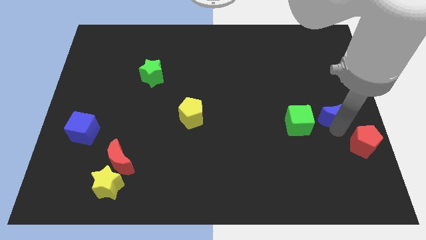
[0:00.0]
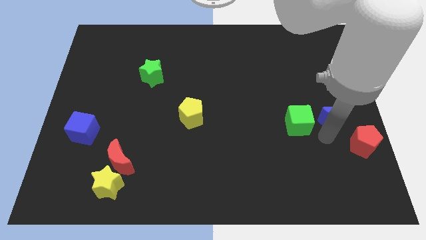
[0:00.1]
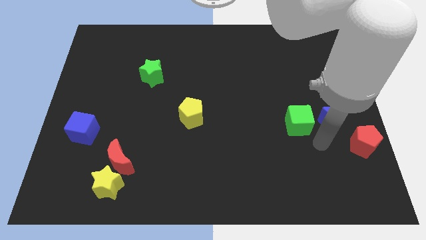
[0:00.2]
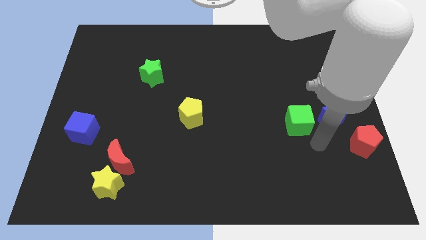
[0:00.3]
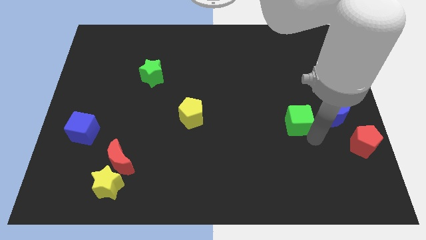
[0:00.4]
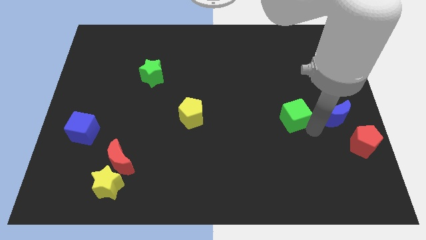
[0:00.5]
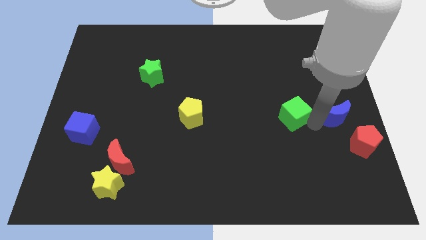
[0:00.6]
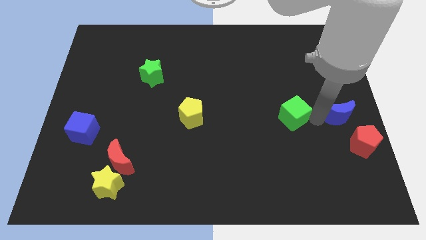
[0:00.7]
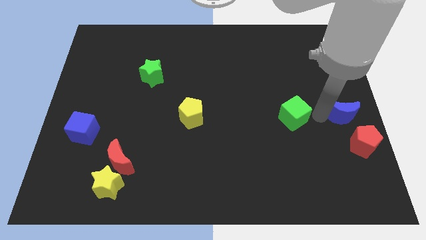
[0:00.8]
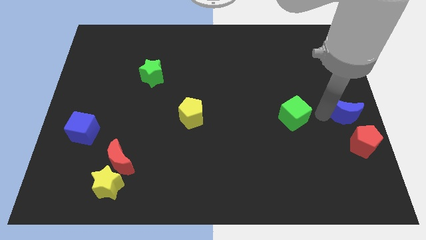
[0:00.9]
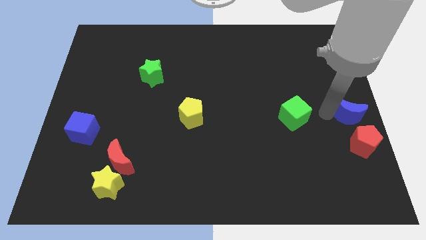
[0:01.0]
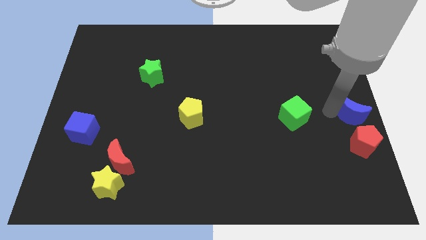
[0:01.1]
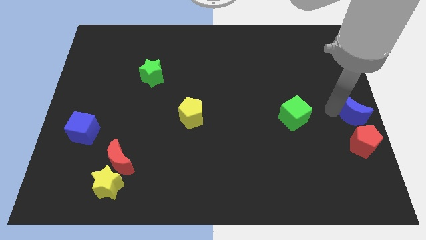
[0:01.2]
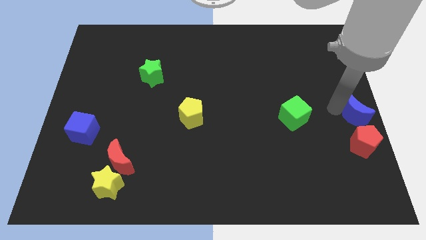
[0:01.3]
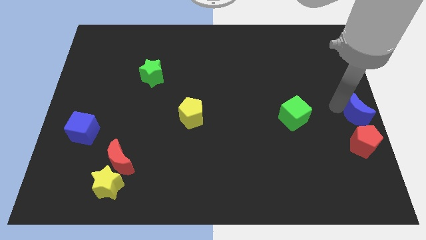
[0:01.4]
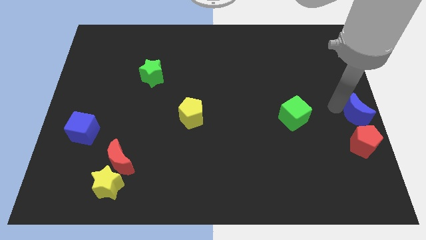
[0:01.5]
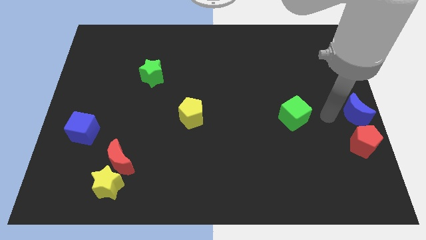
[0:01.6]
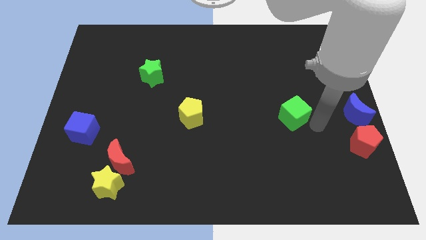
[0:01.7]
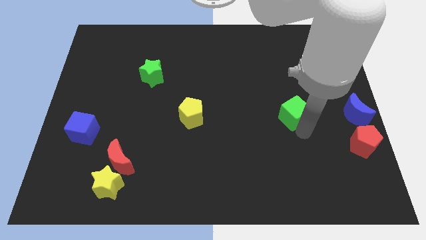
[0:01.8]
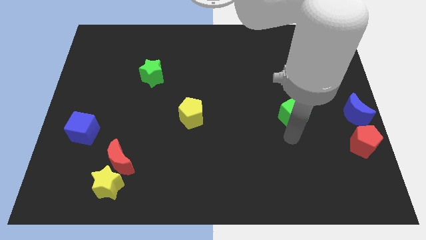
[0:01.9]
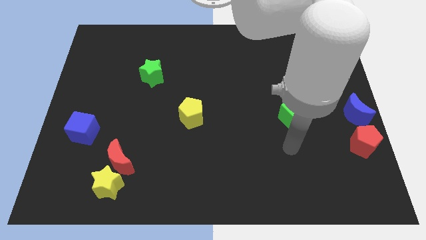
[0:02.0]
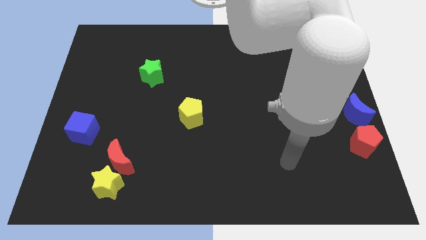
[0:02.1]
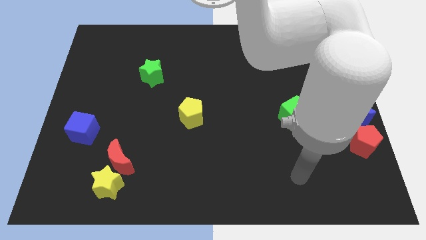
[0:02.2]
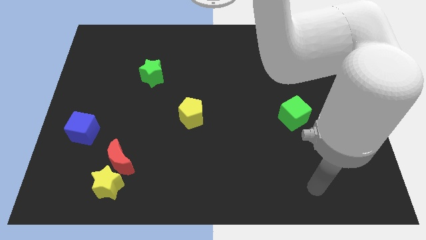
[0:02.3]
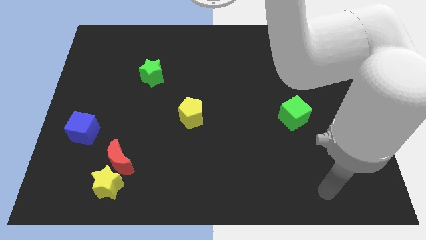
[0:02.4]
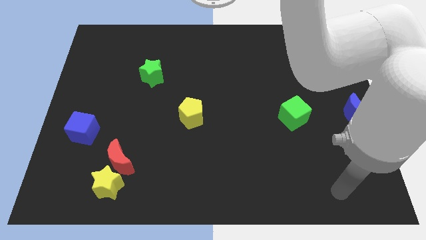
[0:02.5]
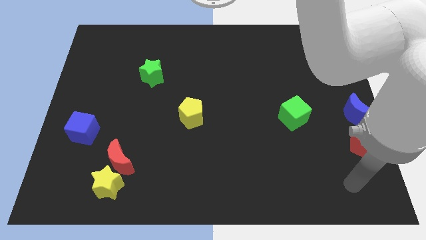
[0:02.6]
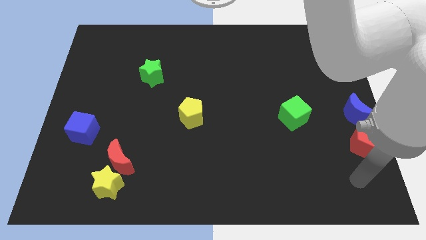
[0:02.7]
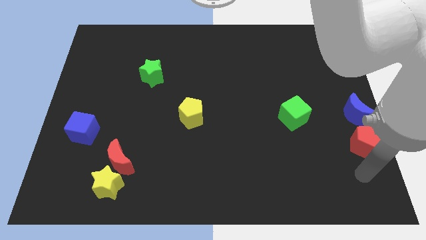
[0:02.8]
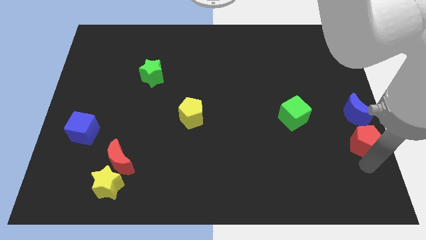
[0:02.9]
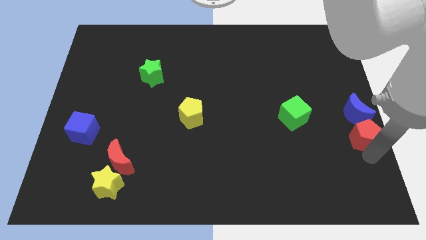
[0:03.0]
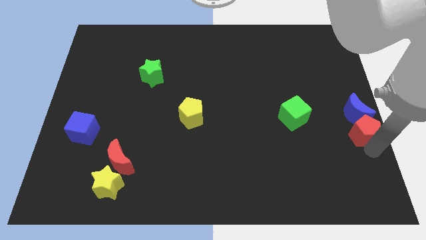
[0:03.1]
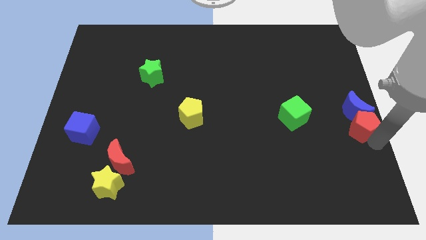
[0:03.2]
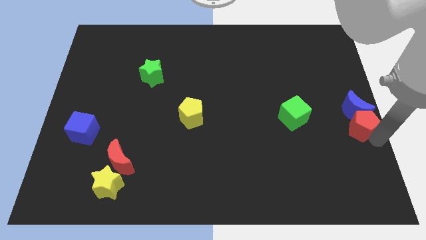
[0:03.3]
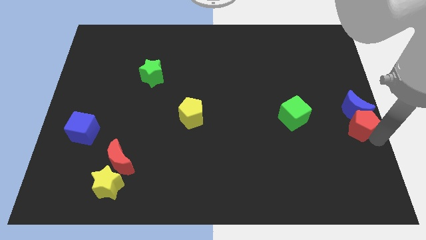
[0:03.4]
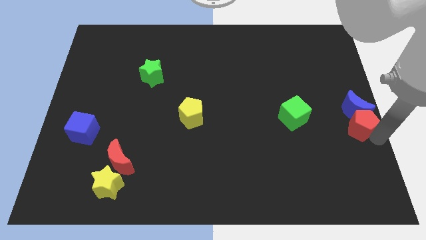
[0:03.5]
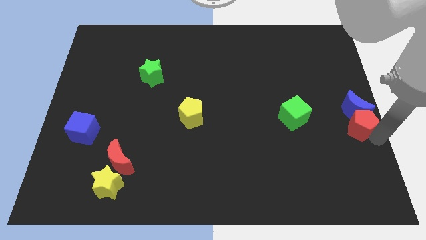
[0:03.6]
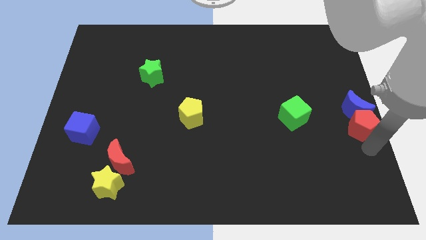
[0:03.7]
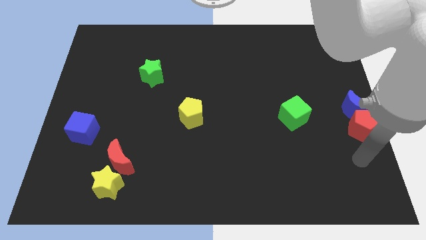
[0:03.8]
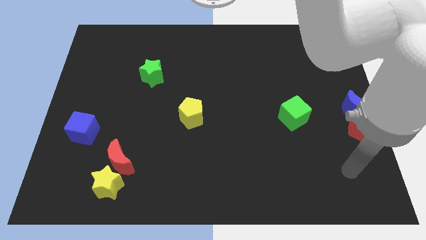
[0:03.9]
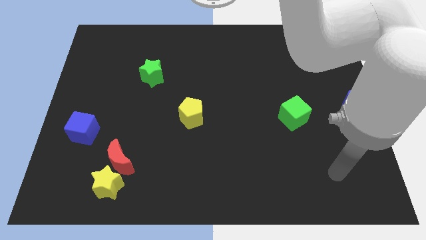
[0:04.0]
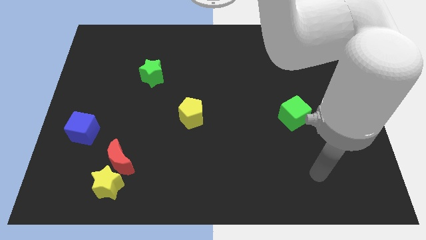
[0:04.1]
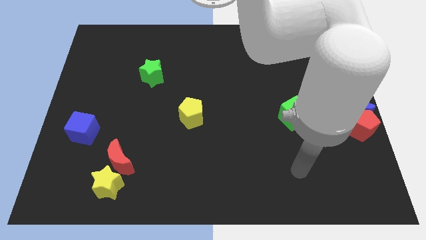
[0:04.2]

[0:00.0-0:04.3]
push the blue crescent and the red pentagon to the right center of the board

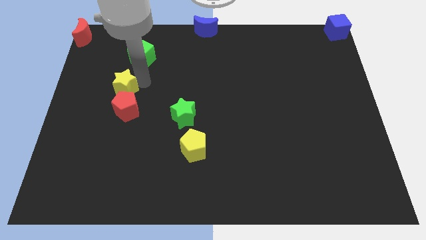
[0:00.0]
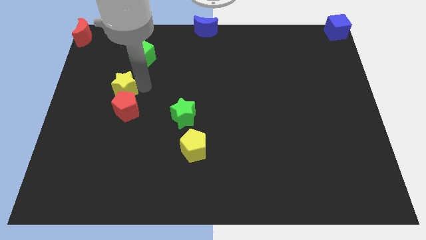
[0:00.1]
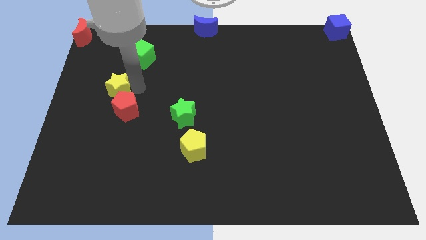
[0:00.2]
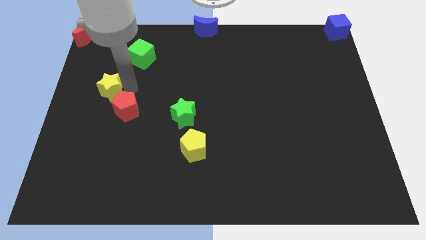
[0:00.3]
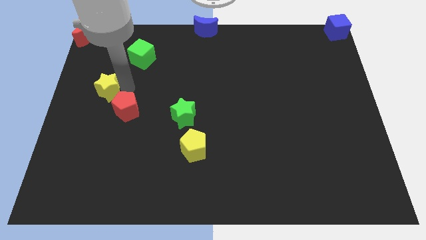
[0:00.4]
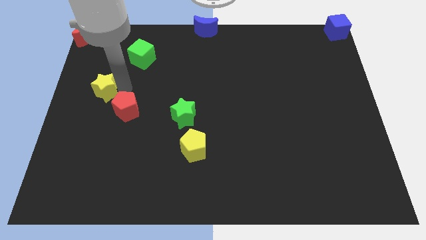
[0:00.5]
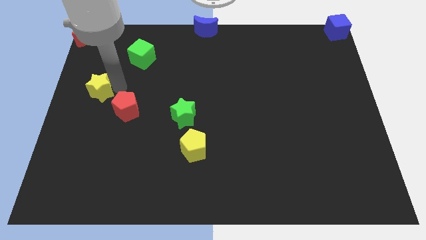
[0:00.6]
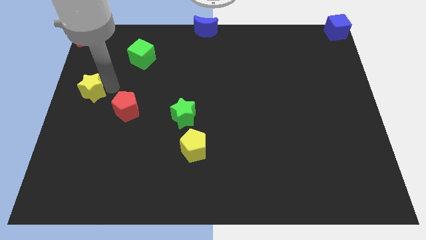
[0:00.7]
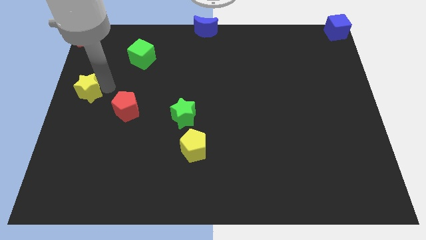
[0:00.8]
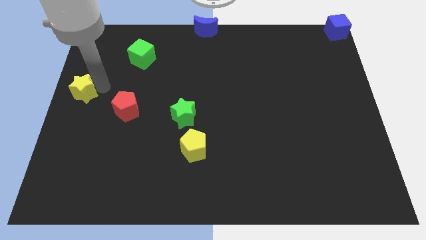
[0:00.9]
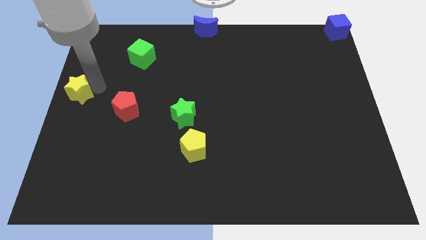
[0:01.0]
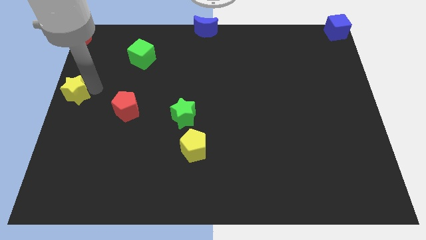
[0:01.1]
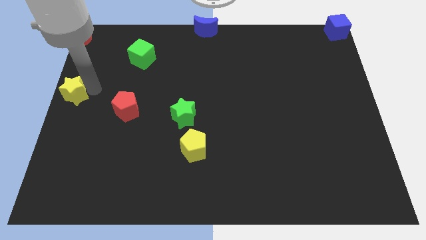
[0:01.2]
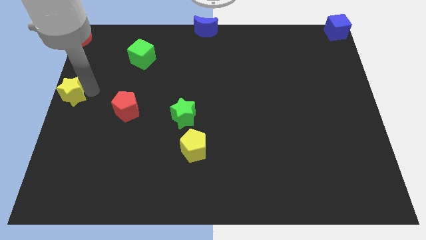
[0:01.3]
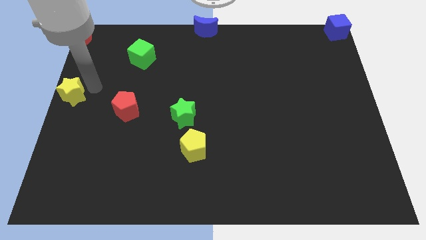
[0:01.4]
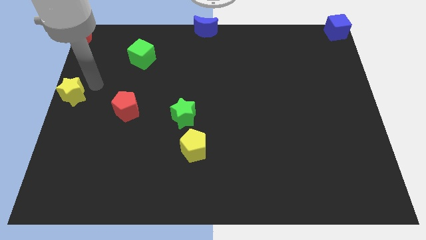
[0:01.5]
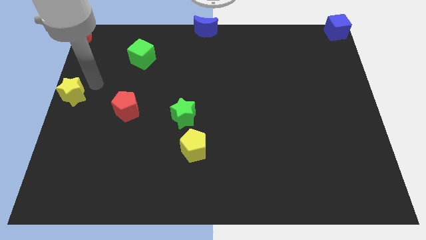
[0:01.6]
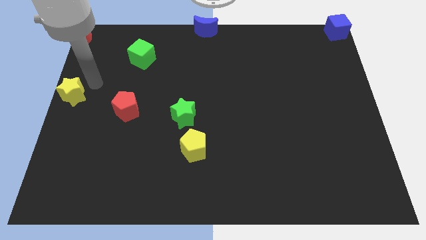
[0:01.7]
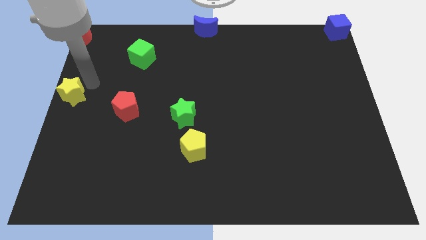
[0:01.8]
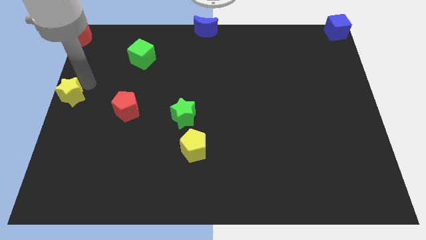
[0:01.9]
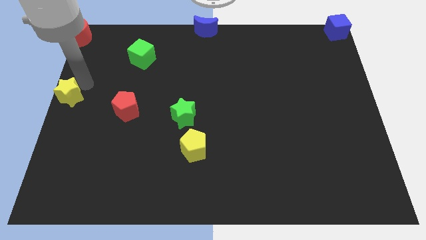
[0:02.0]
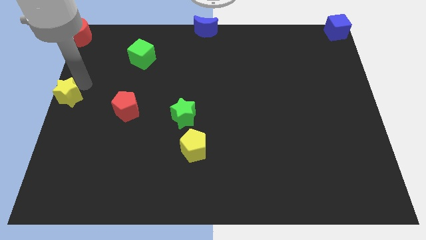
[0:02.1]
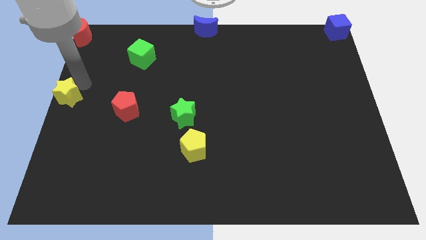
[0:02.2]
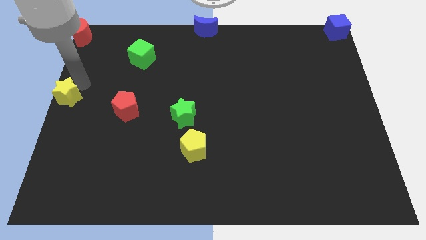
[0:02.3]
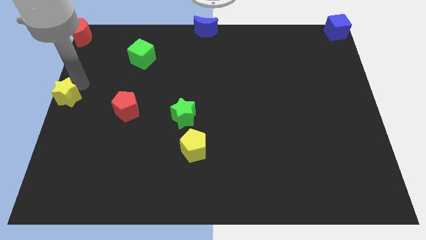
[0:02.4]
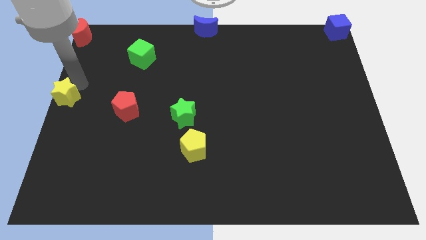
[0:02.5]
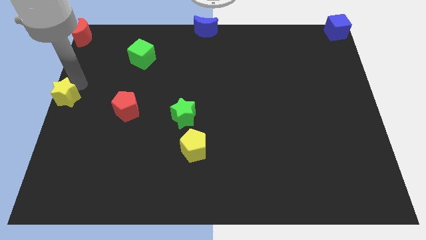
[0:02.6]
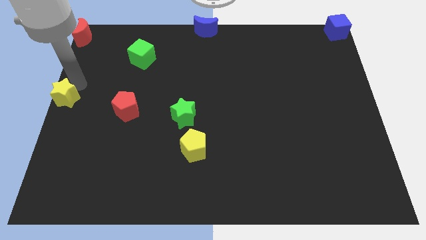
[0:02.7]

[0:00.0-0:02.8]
place the yellow star to the center left of the board

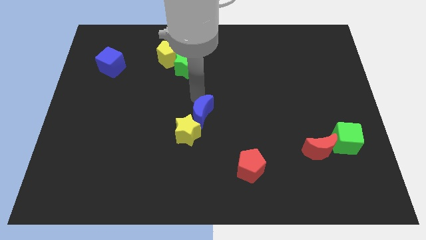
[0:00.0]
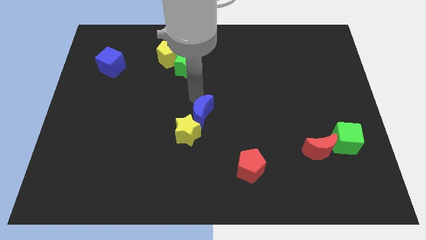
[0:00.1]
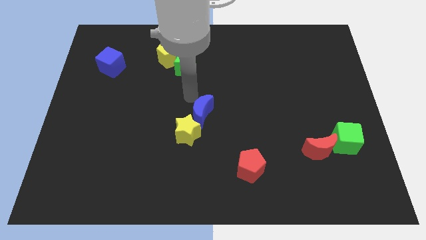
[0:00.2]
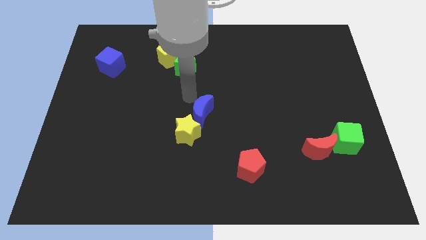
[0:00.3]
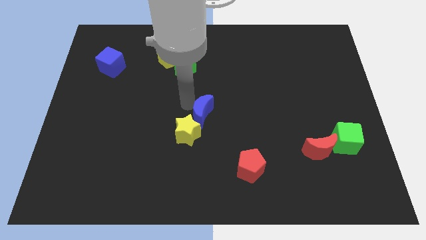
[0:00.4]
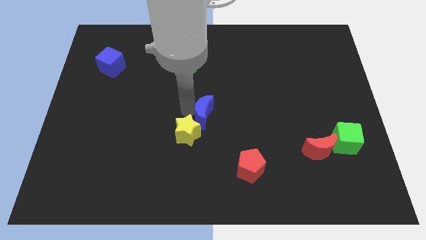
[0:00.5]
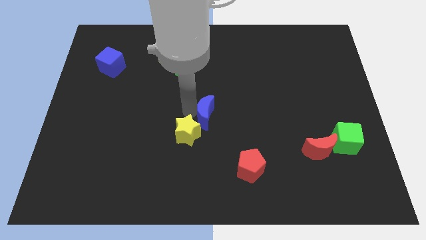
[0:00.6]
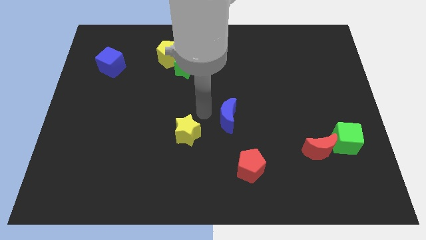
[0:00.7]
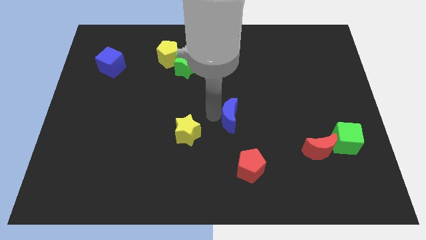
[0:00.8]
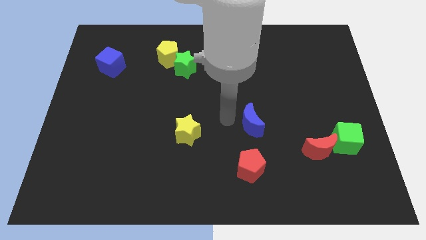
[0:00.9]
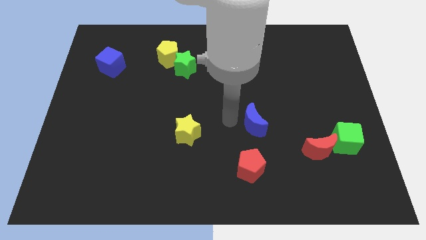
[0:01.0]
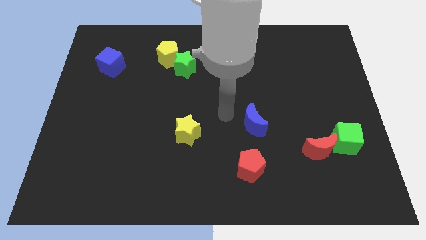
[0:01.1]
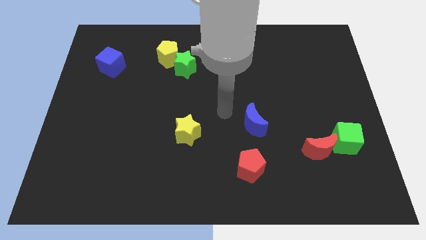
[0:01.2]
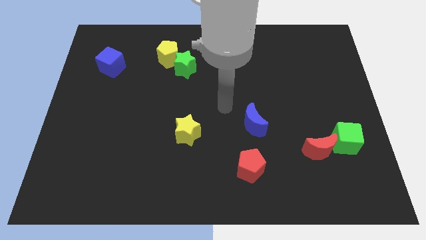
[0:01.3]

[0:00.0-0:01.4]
move the blue crescent vertically to the top of the red crescent

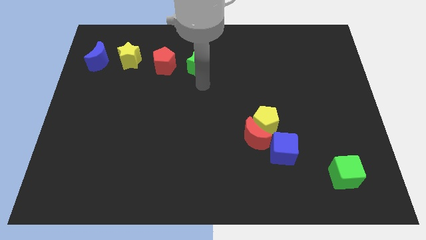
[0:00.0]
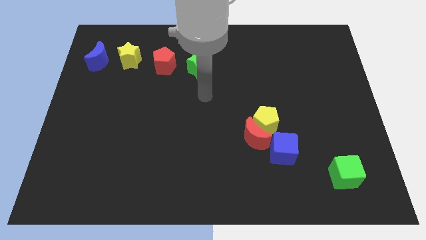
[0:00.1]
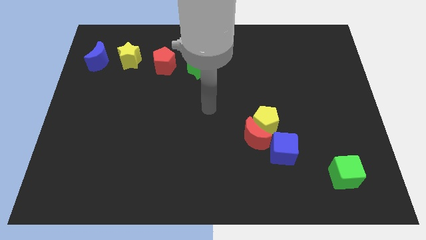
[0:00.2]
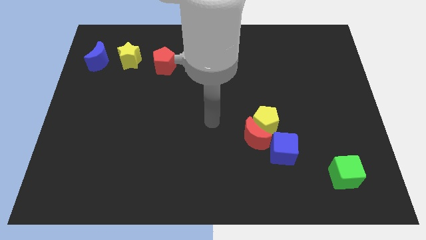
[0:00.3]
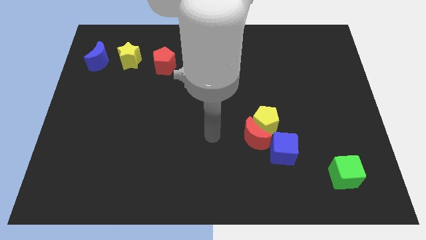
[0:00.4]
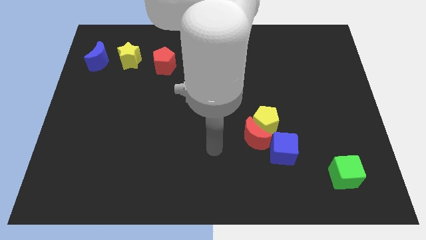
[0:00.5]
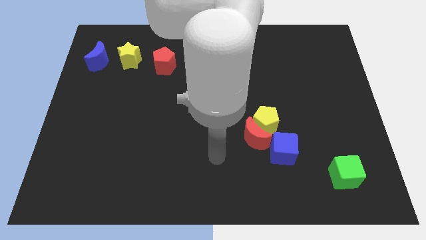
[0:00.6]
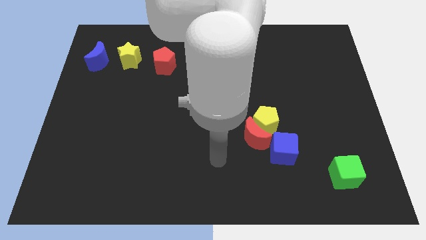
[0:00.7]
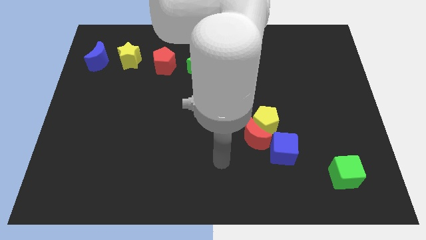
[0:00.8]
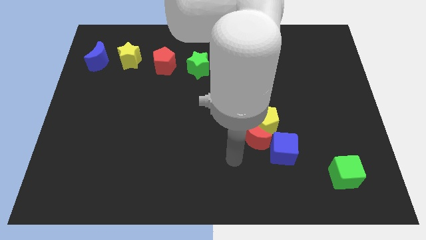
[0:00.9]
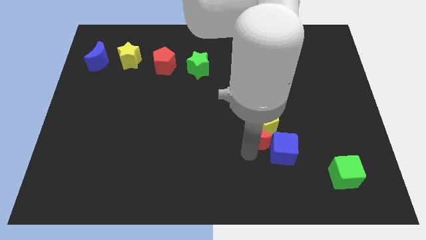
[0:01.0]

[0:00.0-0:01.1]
move your arm towards the red crescent
